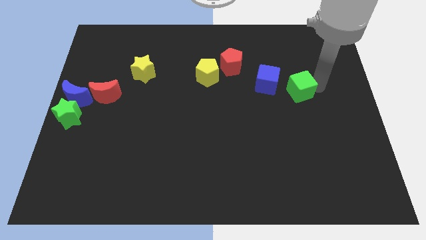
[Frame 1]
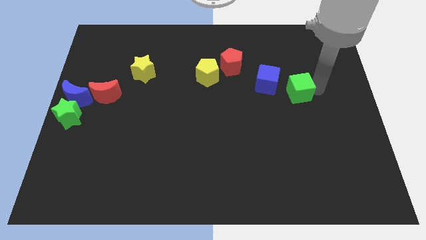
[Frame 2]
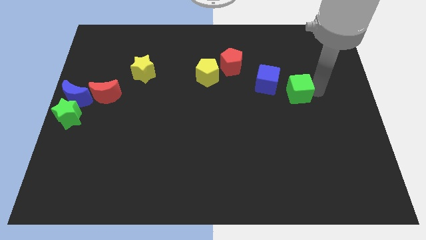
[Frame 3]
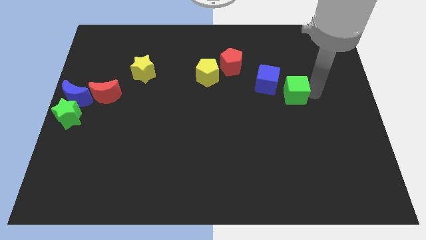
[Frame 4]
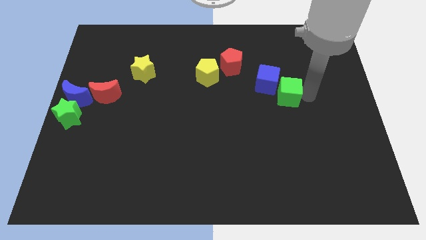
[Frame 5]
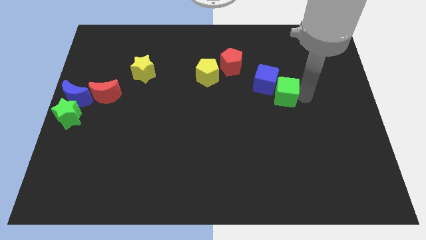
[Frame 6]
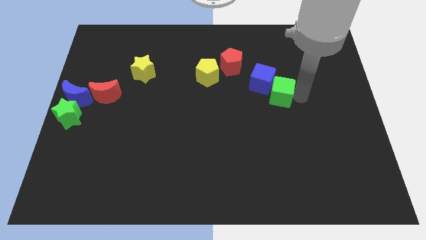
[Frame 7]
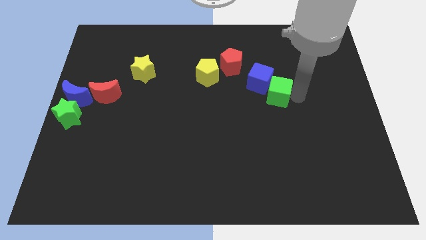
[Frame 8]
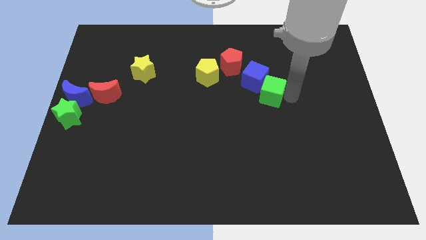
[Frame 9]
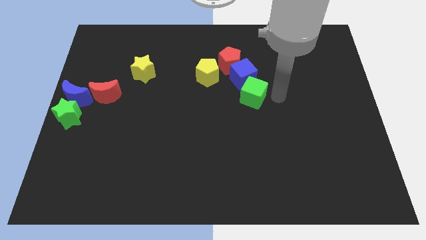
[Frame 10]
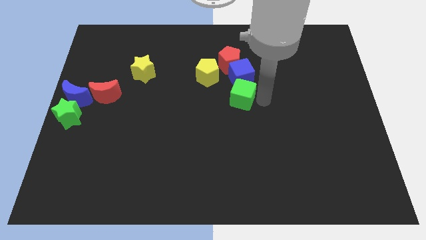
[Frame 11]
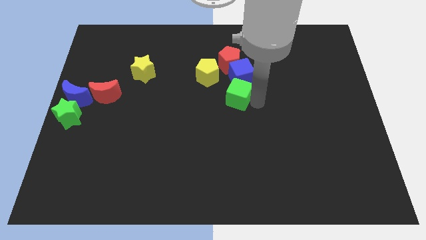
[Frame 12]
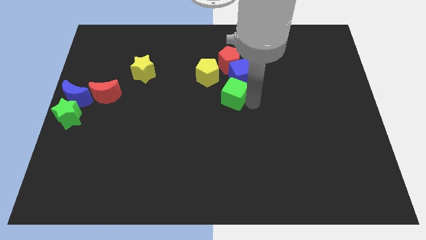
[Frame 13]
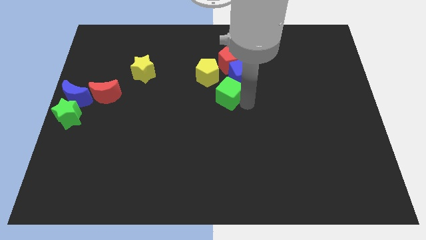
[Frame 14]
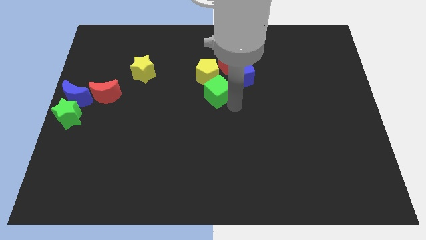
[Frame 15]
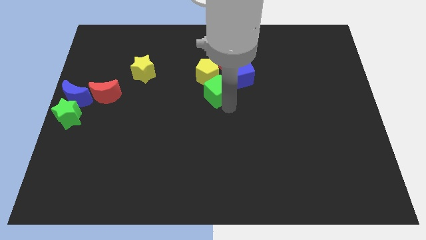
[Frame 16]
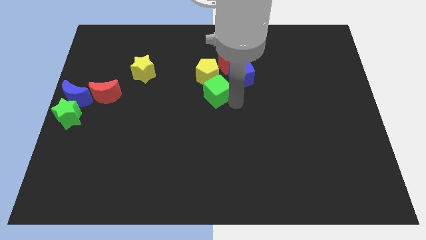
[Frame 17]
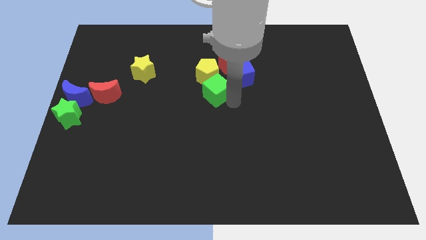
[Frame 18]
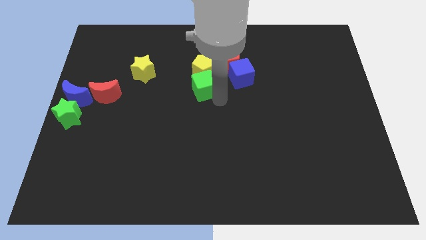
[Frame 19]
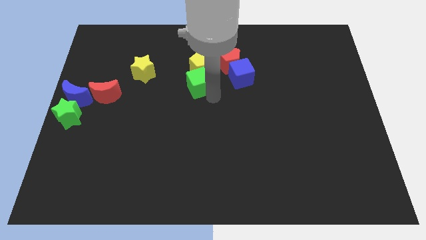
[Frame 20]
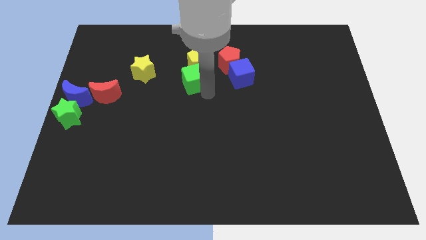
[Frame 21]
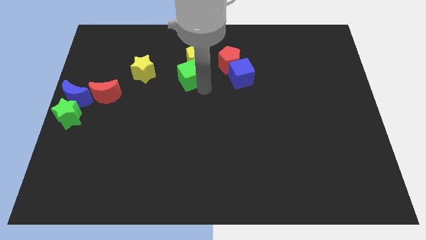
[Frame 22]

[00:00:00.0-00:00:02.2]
push the green cube into yellow pentagon

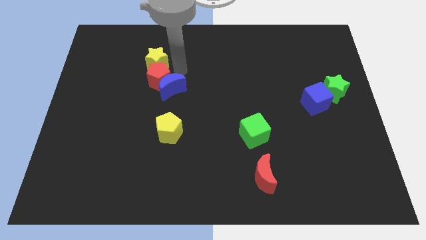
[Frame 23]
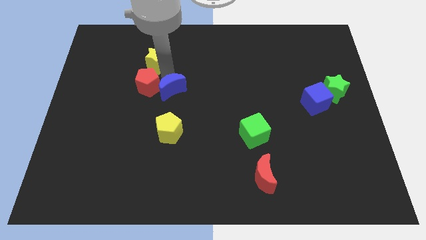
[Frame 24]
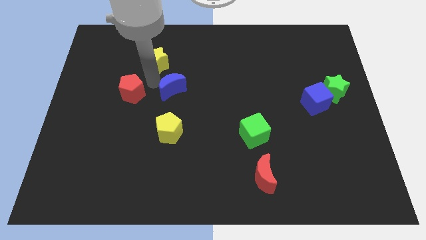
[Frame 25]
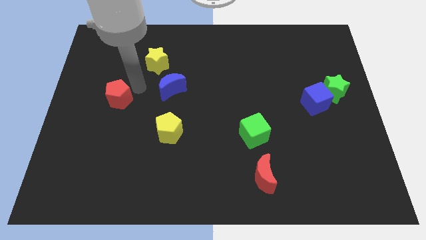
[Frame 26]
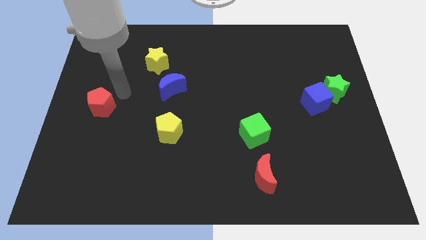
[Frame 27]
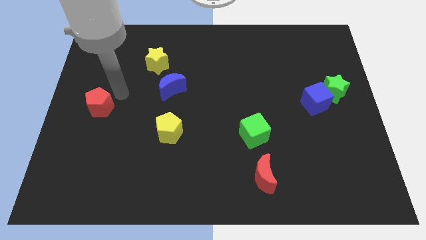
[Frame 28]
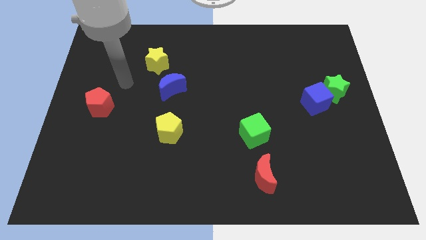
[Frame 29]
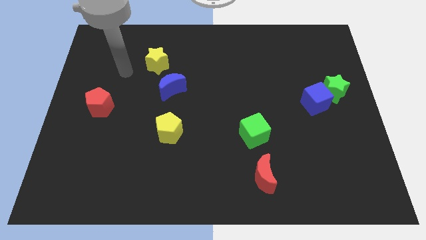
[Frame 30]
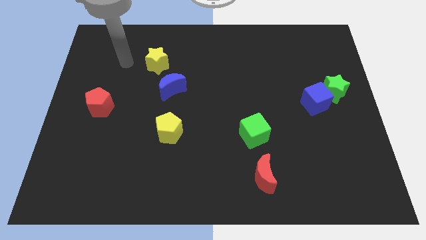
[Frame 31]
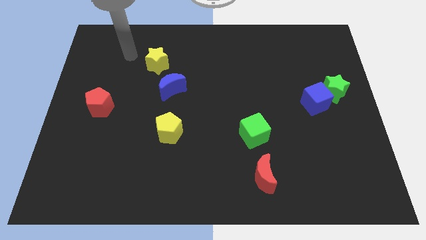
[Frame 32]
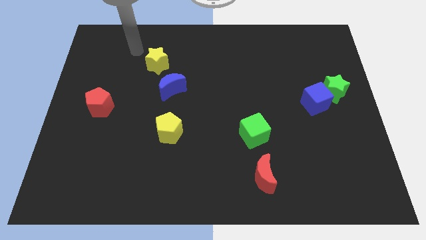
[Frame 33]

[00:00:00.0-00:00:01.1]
separate red pentagon from the yellow star and the blue moon

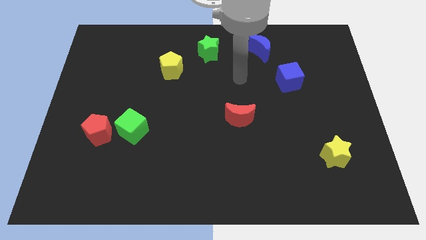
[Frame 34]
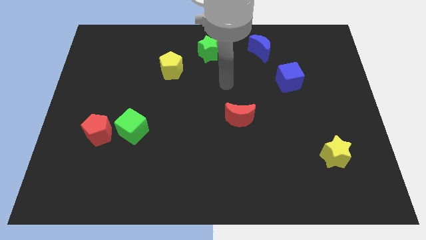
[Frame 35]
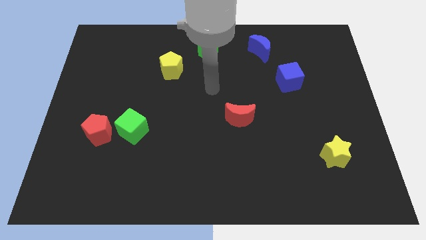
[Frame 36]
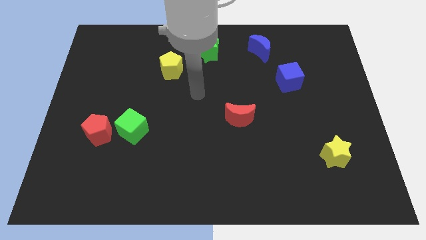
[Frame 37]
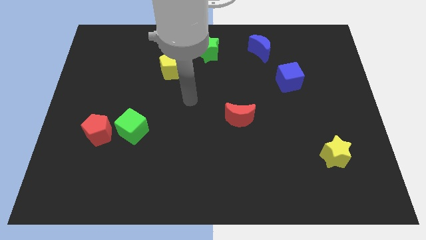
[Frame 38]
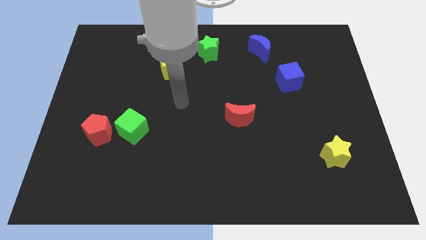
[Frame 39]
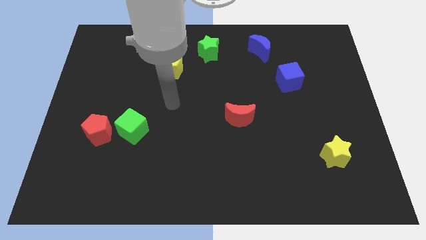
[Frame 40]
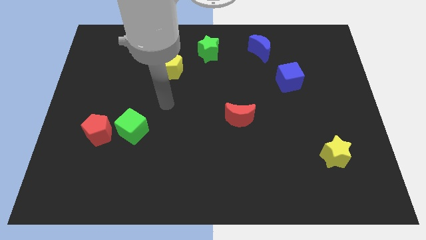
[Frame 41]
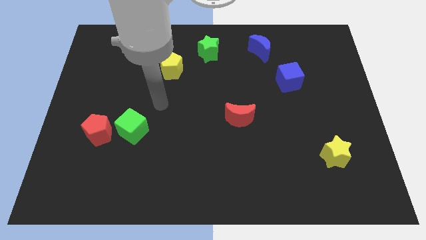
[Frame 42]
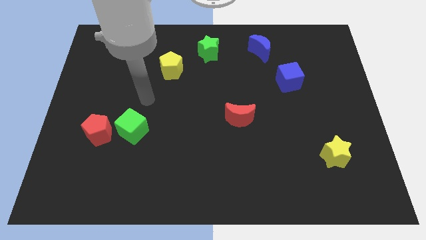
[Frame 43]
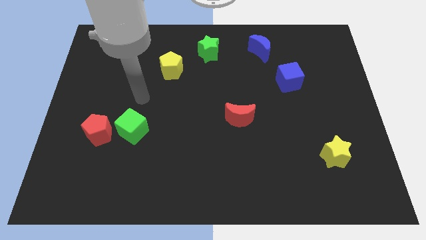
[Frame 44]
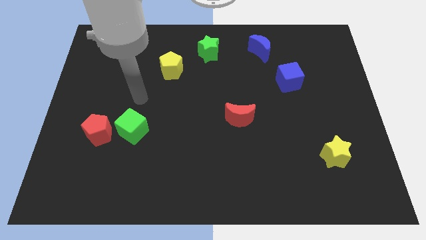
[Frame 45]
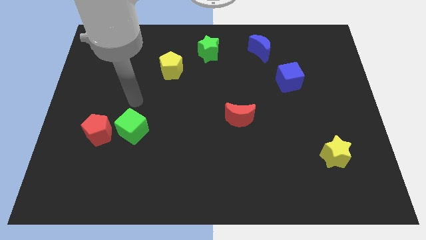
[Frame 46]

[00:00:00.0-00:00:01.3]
move arm towards the green cube

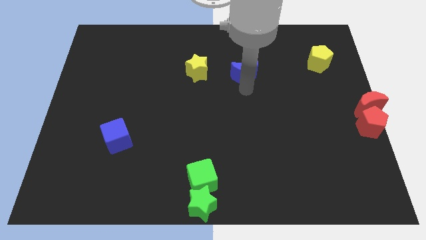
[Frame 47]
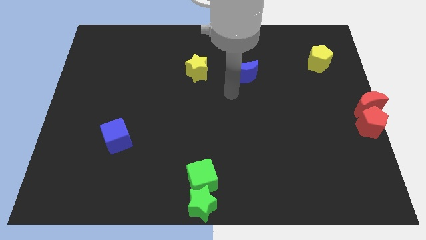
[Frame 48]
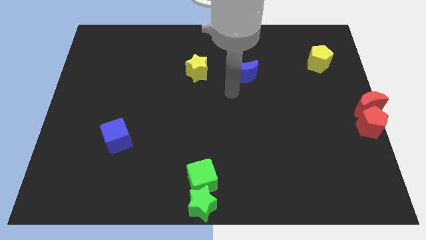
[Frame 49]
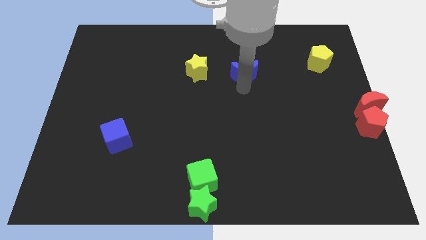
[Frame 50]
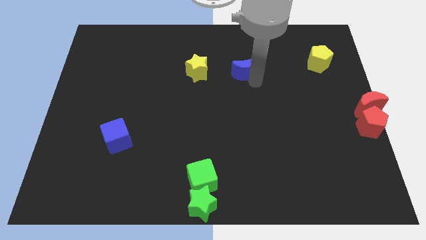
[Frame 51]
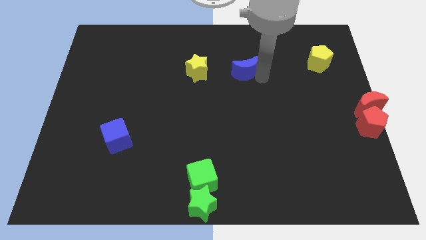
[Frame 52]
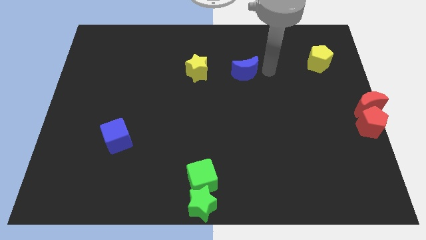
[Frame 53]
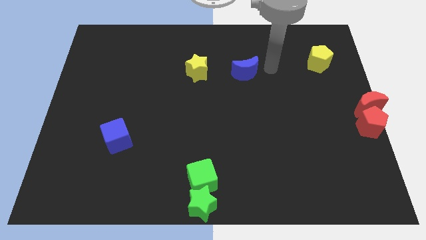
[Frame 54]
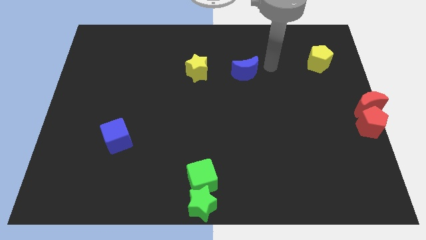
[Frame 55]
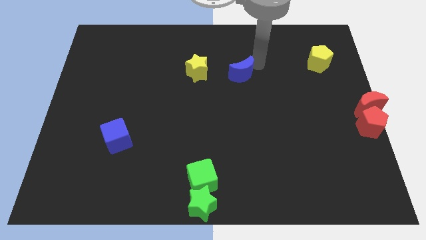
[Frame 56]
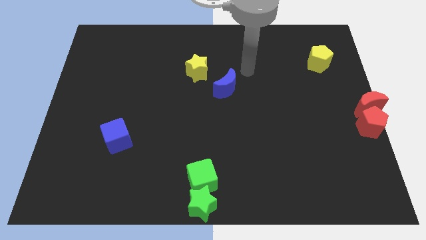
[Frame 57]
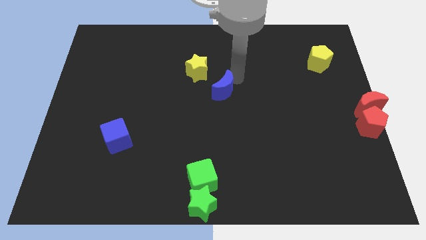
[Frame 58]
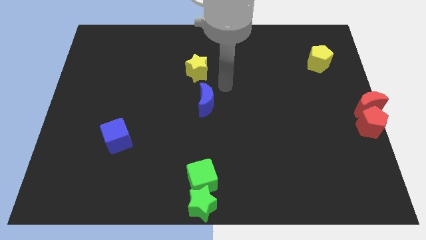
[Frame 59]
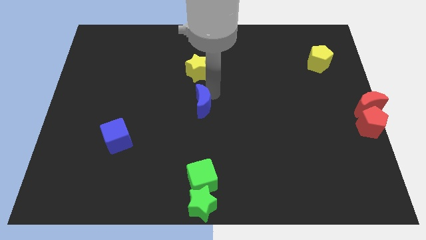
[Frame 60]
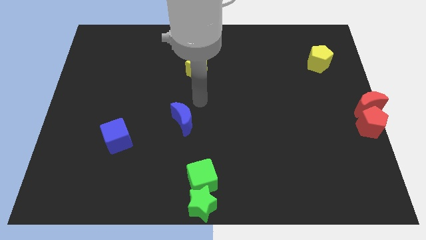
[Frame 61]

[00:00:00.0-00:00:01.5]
push the blue moon below the yellow star

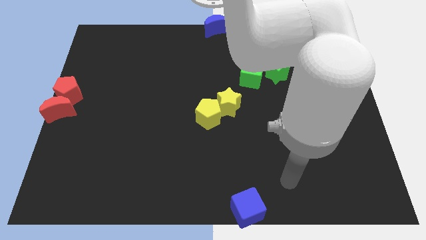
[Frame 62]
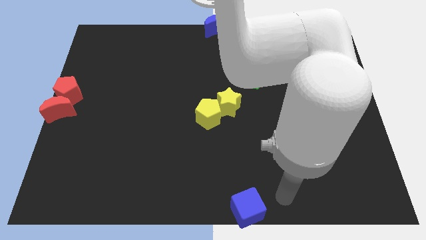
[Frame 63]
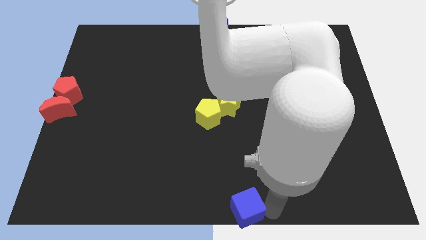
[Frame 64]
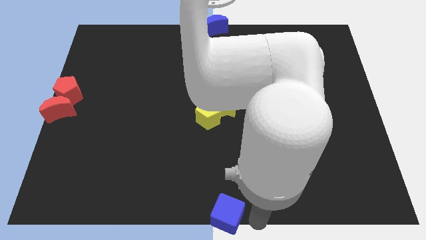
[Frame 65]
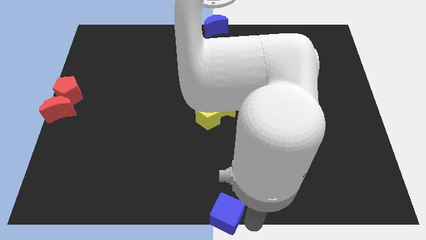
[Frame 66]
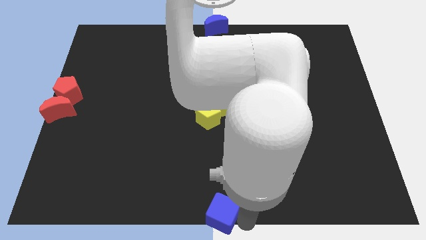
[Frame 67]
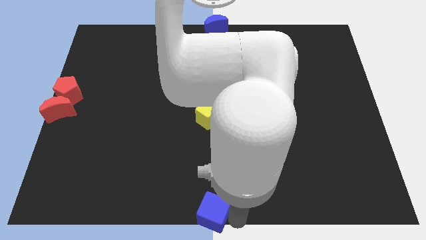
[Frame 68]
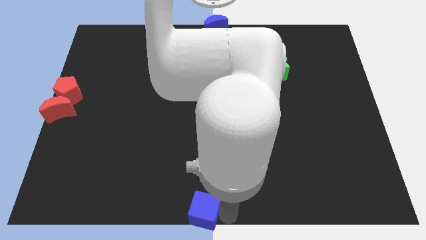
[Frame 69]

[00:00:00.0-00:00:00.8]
push blue cube below yellow pentagon

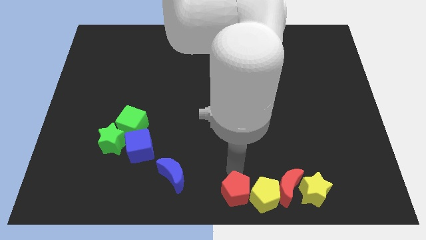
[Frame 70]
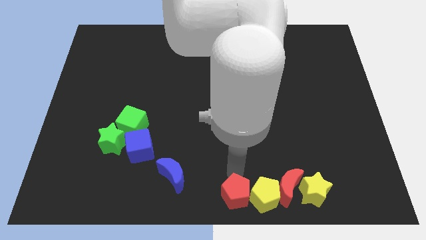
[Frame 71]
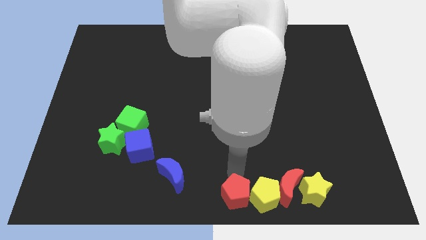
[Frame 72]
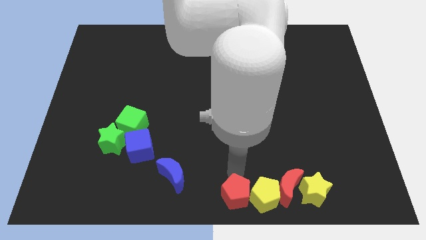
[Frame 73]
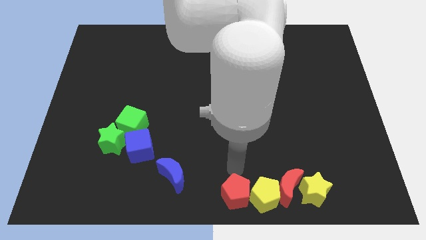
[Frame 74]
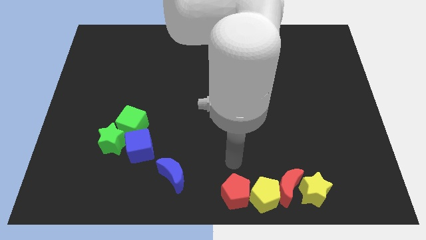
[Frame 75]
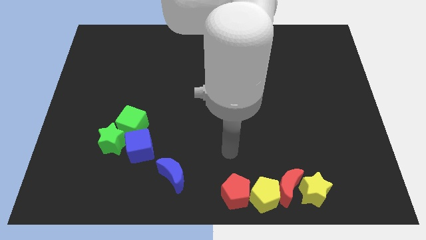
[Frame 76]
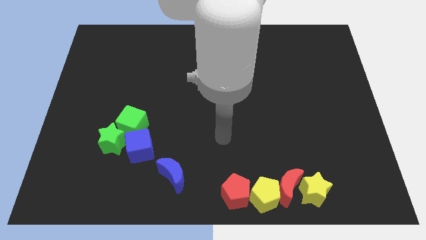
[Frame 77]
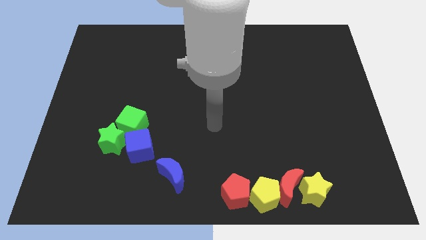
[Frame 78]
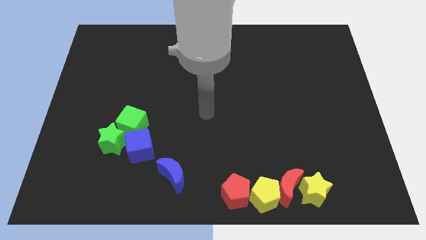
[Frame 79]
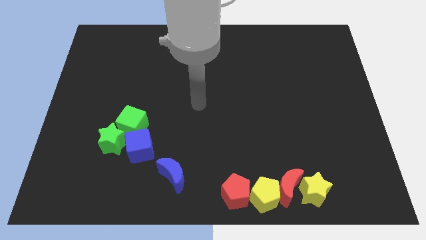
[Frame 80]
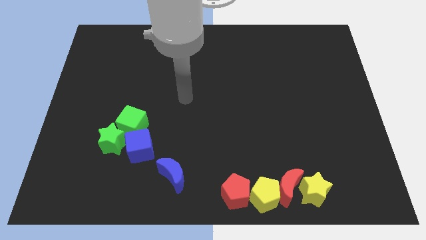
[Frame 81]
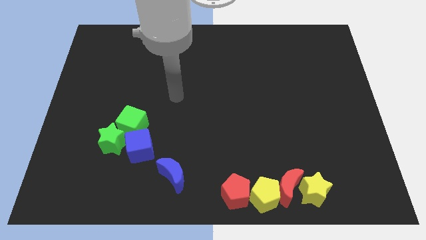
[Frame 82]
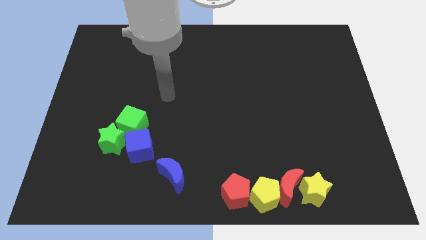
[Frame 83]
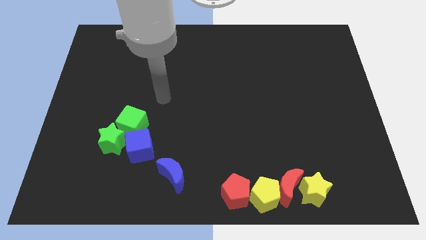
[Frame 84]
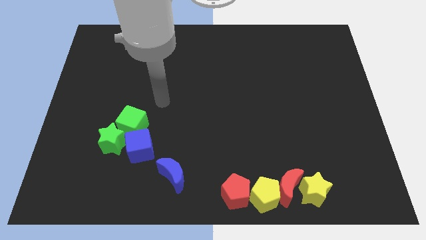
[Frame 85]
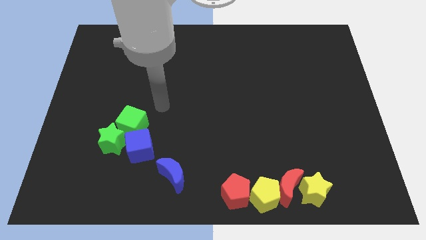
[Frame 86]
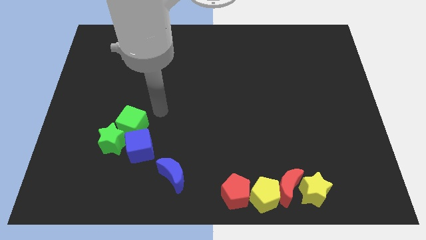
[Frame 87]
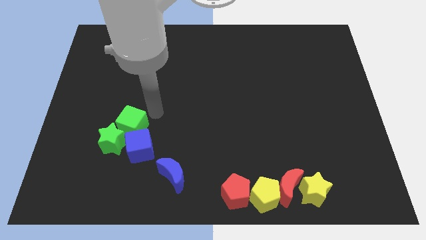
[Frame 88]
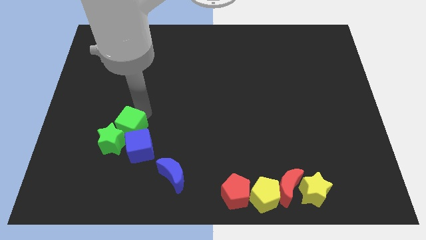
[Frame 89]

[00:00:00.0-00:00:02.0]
move your arm to the top right of the green cube

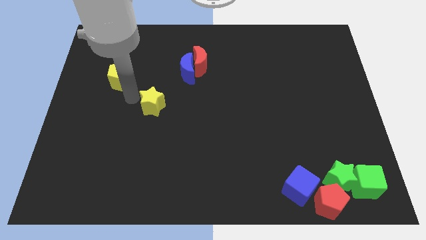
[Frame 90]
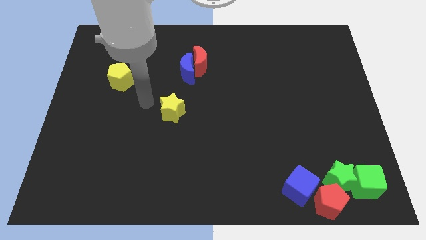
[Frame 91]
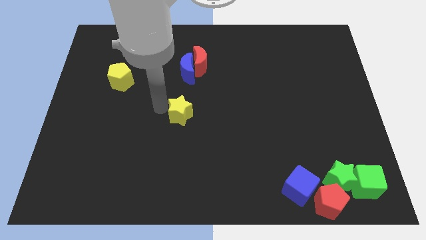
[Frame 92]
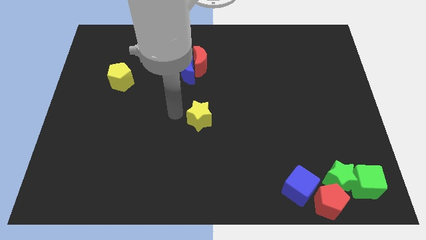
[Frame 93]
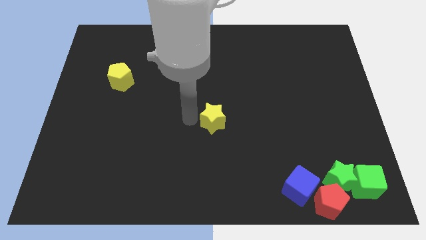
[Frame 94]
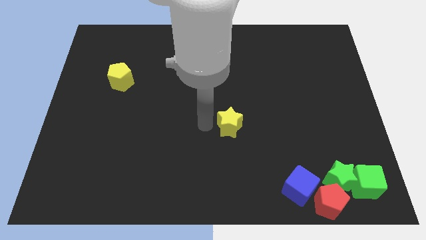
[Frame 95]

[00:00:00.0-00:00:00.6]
move the yellow star to the center of the board
